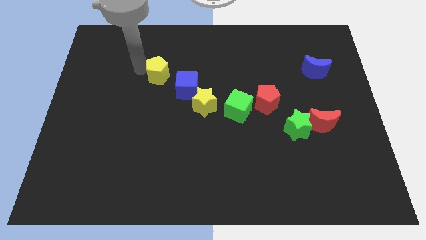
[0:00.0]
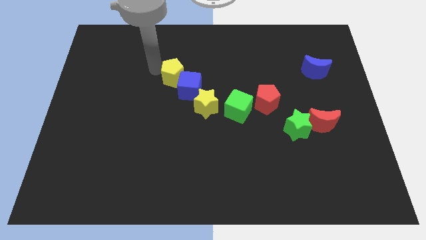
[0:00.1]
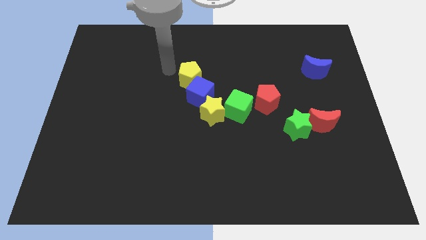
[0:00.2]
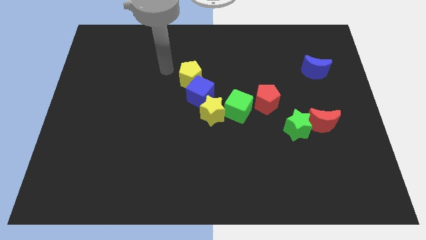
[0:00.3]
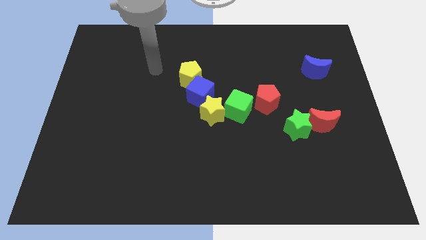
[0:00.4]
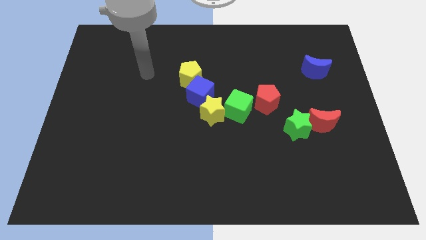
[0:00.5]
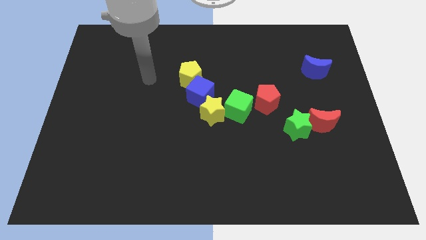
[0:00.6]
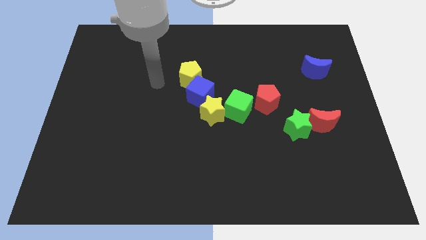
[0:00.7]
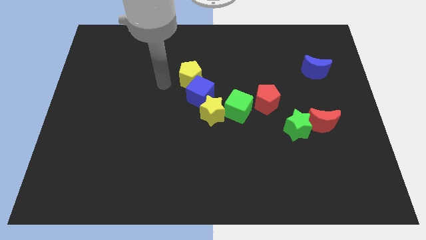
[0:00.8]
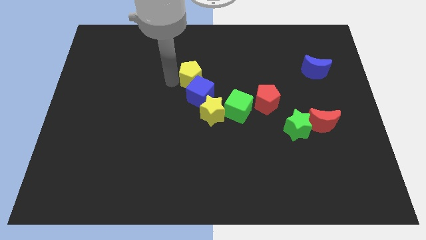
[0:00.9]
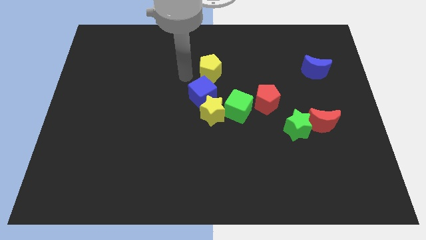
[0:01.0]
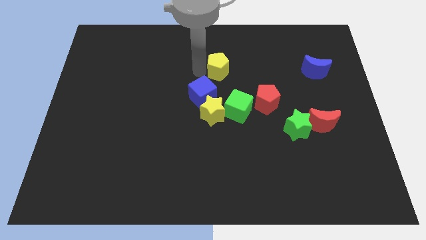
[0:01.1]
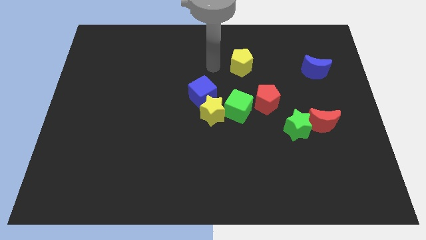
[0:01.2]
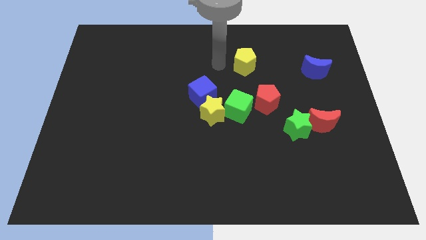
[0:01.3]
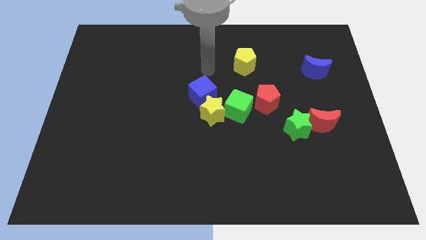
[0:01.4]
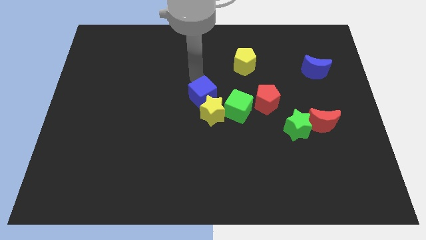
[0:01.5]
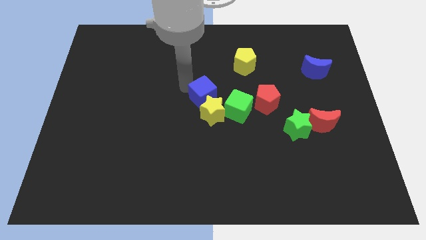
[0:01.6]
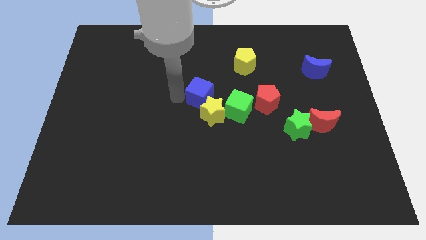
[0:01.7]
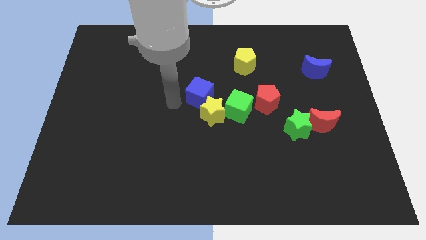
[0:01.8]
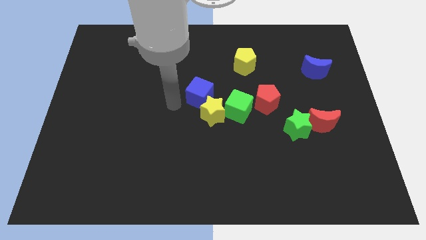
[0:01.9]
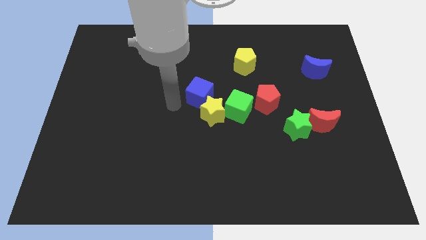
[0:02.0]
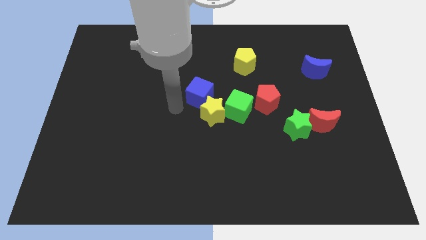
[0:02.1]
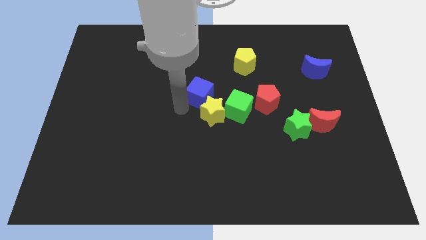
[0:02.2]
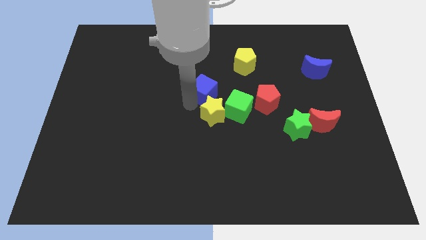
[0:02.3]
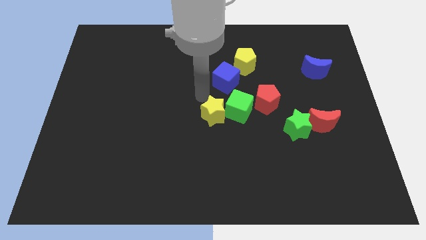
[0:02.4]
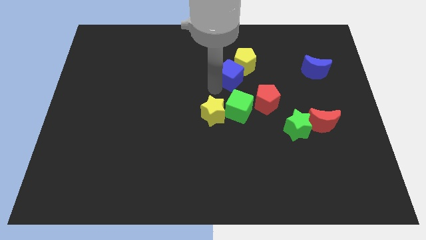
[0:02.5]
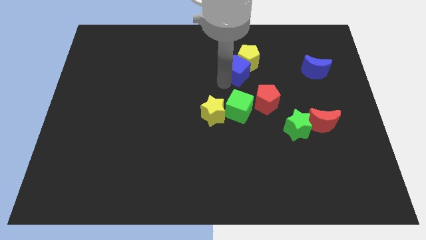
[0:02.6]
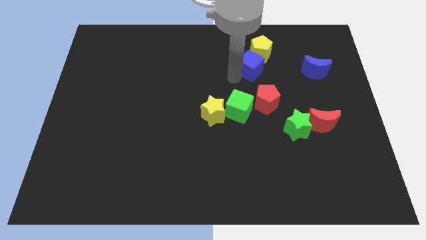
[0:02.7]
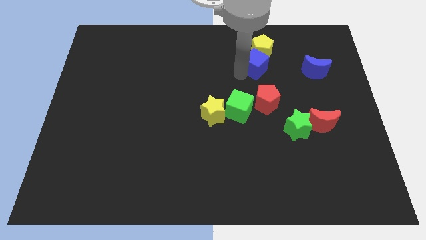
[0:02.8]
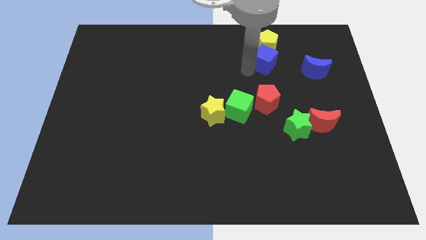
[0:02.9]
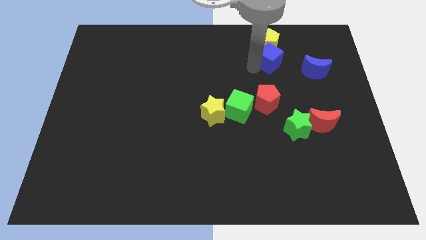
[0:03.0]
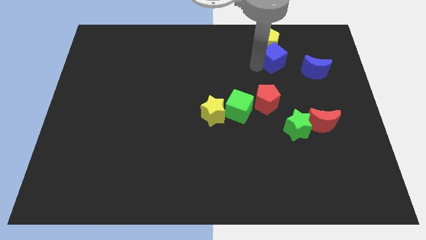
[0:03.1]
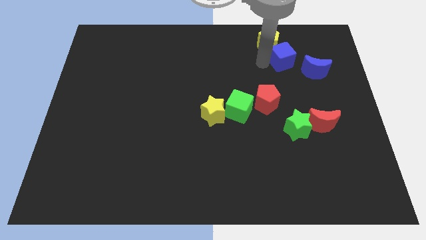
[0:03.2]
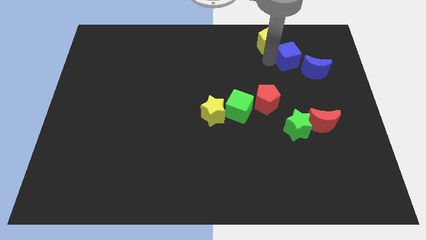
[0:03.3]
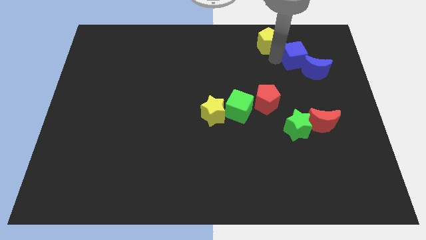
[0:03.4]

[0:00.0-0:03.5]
place the blue cube into the blue moon

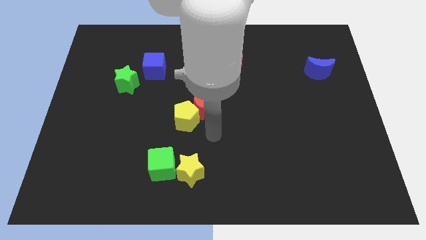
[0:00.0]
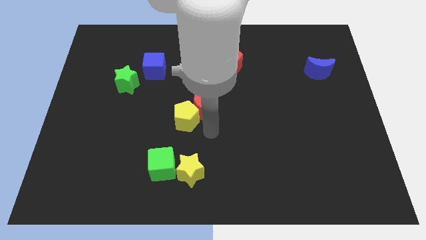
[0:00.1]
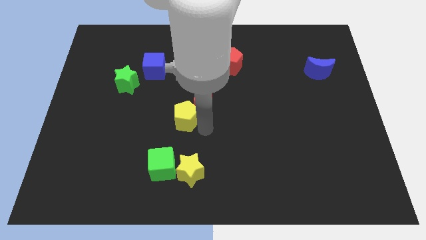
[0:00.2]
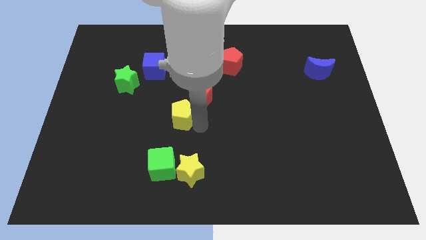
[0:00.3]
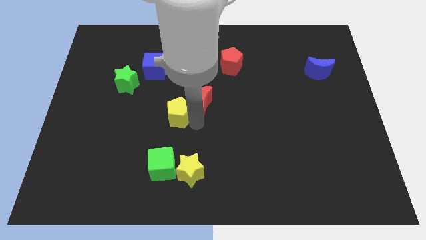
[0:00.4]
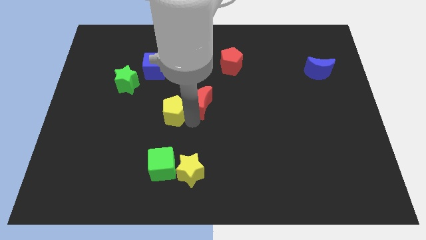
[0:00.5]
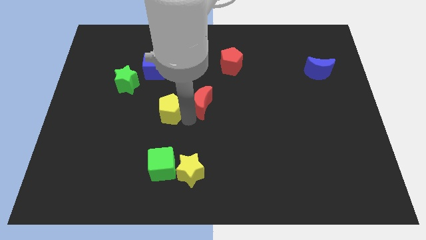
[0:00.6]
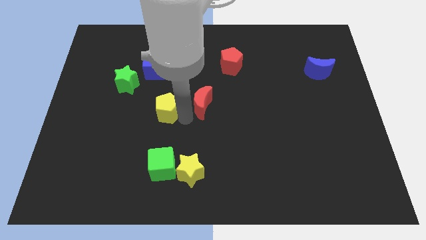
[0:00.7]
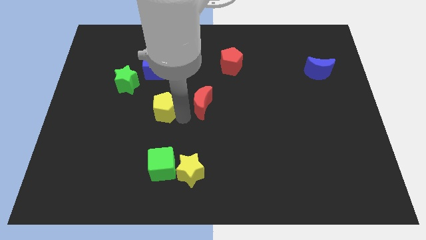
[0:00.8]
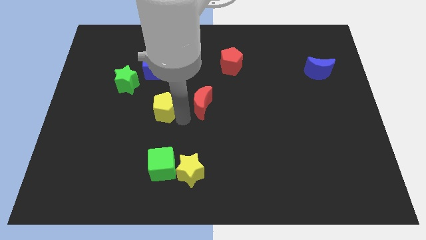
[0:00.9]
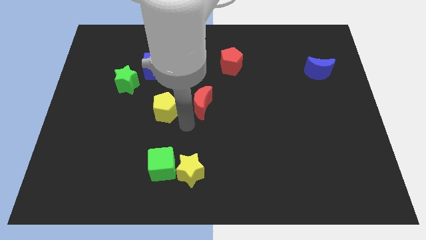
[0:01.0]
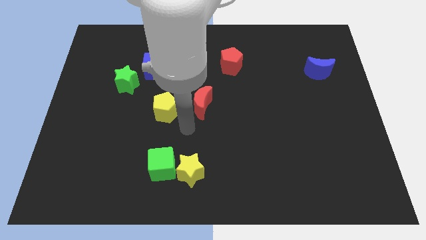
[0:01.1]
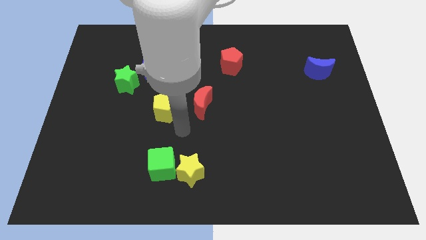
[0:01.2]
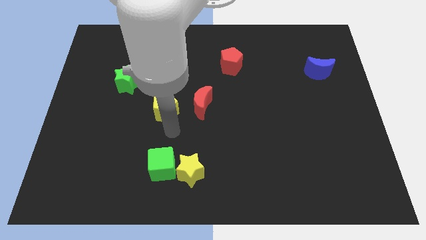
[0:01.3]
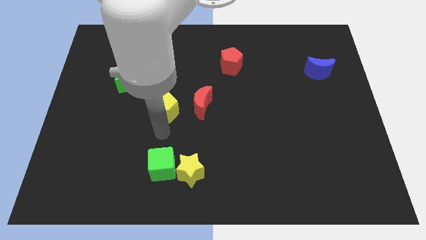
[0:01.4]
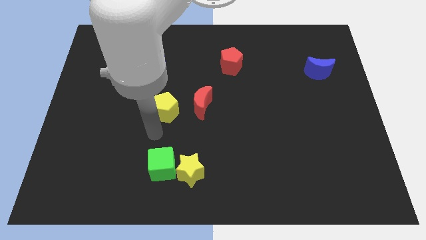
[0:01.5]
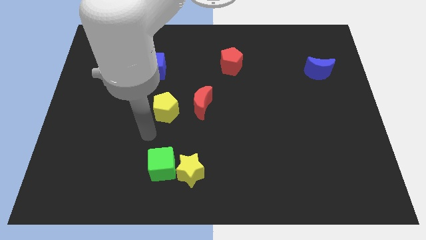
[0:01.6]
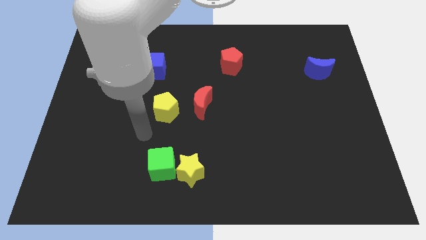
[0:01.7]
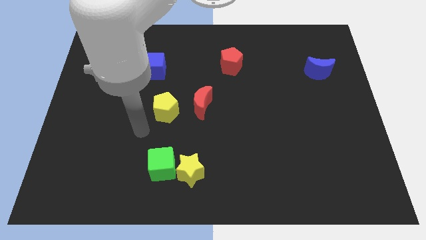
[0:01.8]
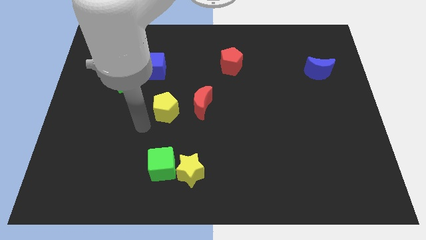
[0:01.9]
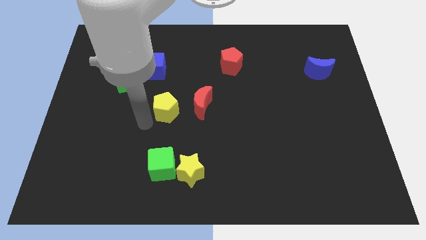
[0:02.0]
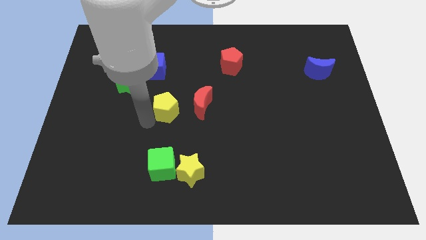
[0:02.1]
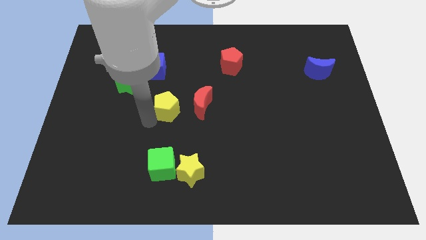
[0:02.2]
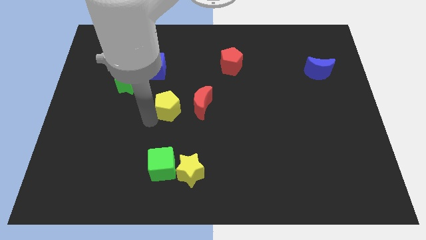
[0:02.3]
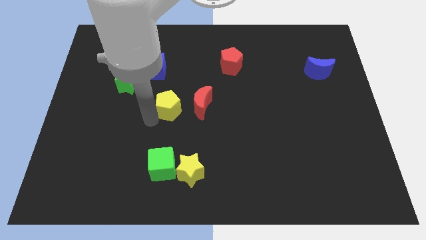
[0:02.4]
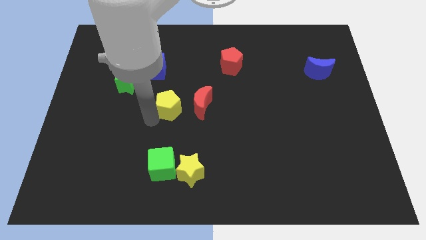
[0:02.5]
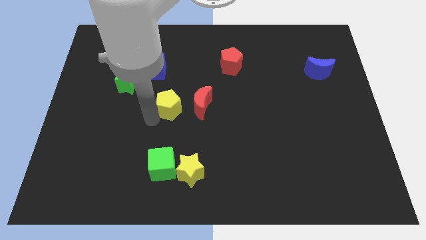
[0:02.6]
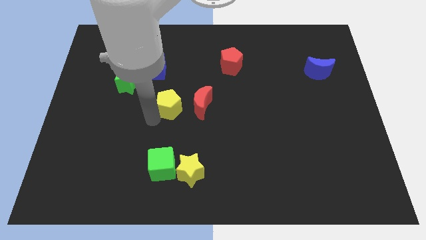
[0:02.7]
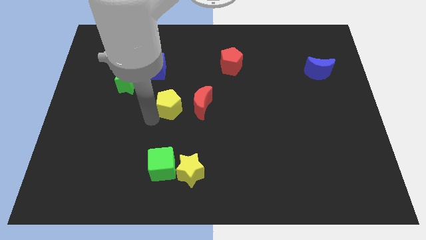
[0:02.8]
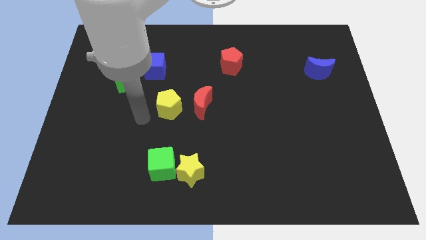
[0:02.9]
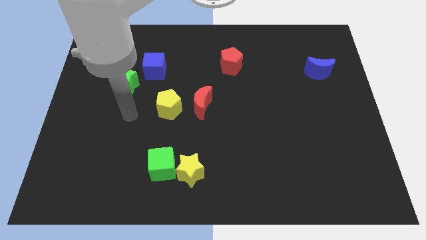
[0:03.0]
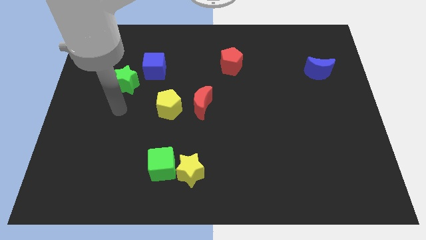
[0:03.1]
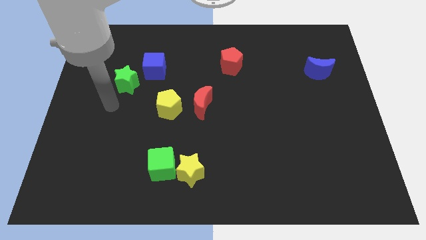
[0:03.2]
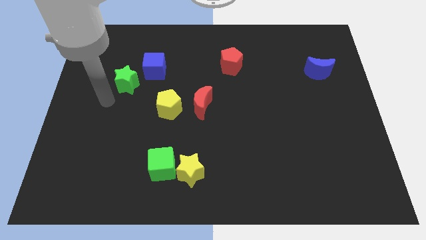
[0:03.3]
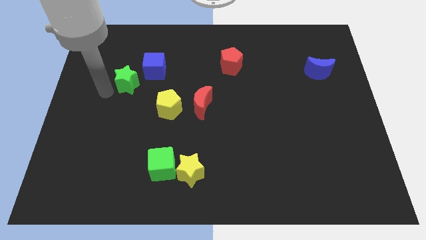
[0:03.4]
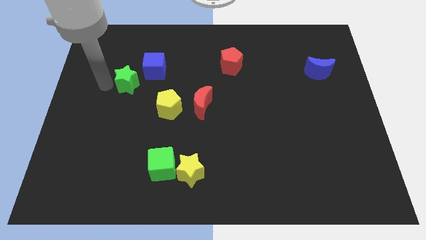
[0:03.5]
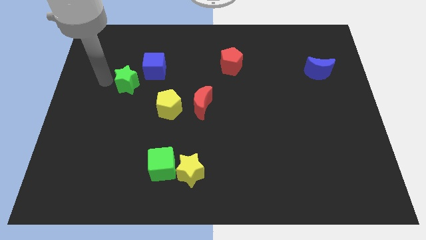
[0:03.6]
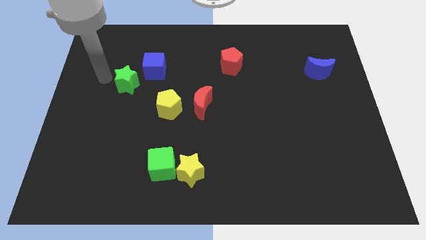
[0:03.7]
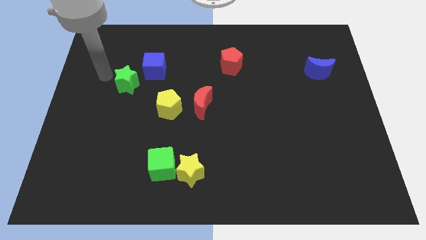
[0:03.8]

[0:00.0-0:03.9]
place the yellow pentagon left to the red crescent

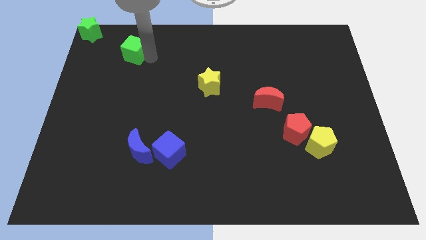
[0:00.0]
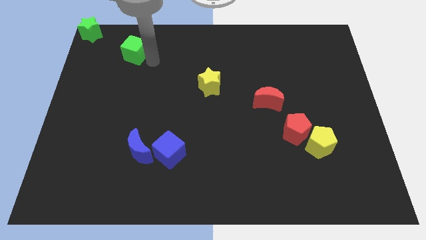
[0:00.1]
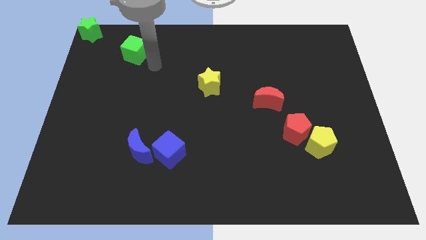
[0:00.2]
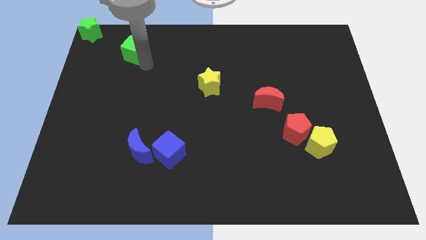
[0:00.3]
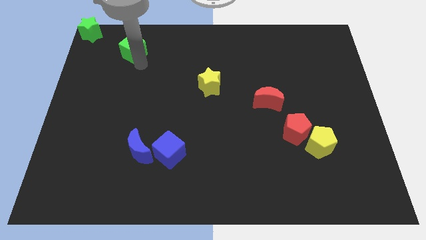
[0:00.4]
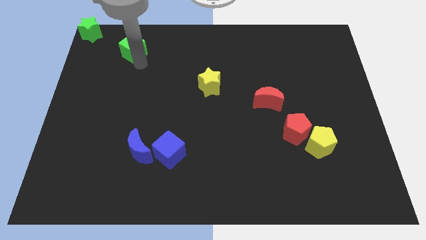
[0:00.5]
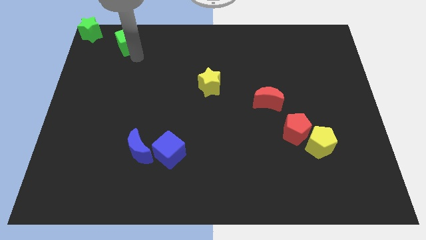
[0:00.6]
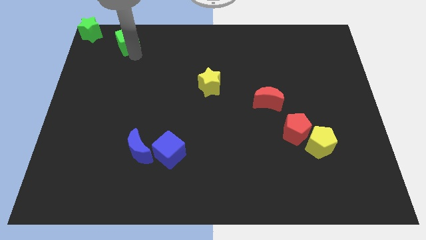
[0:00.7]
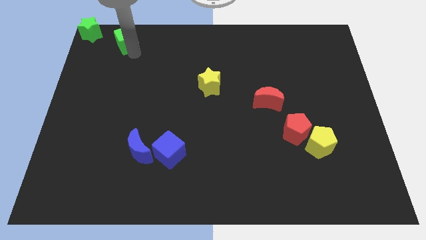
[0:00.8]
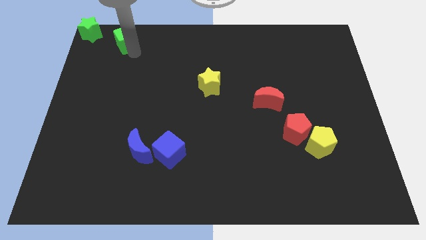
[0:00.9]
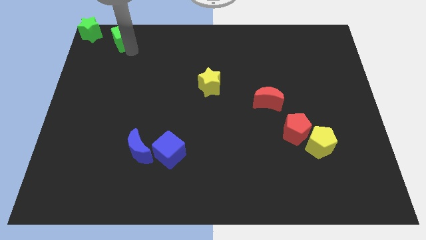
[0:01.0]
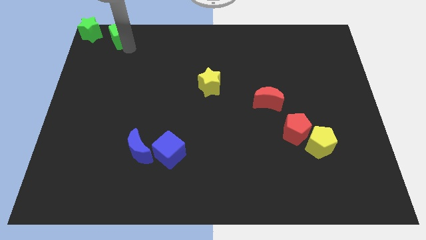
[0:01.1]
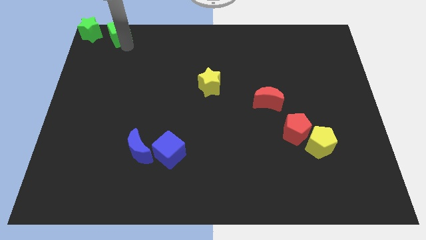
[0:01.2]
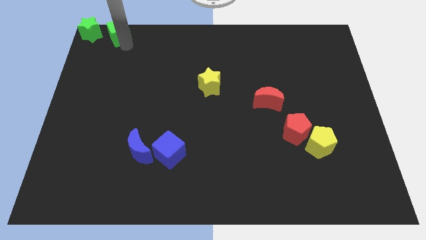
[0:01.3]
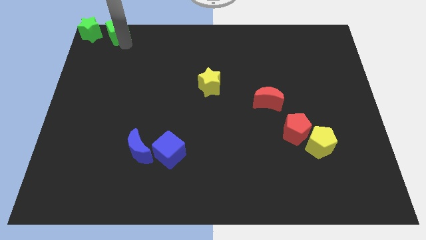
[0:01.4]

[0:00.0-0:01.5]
place the green cube to the right of the green star
